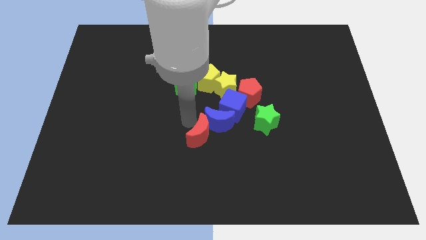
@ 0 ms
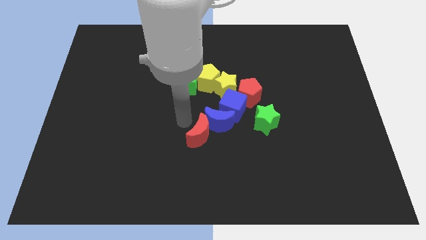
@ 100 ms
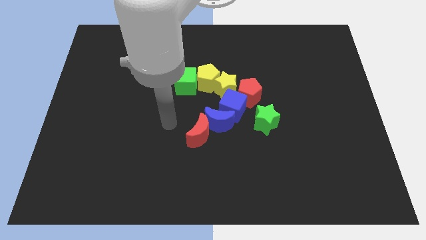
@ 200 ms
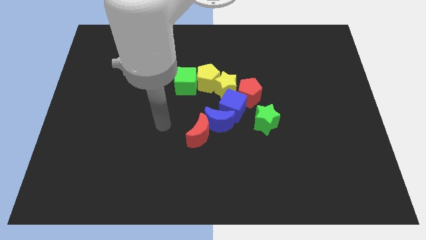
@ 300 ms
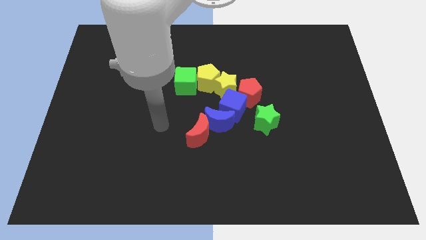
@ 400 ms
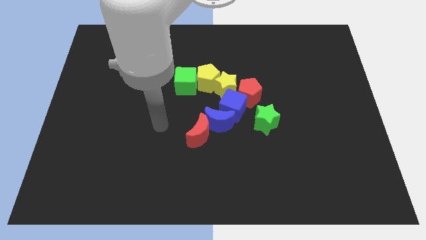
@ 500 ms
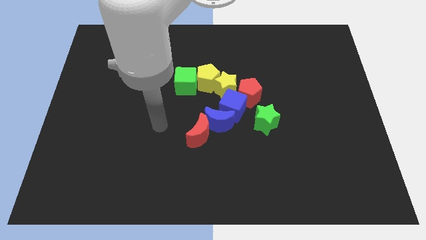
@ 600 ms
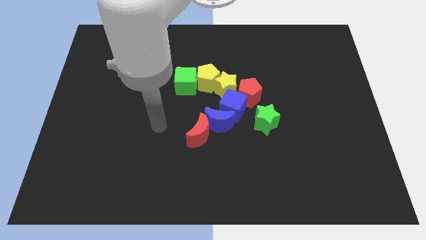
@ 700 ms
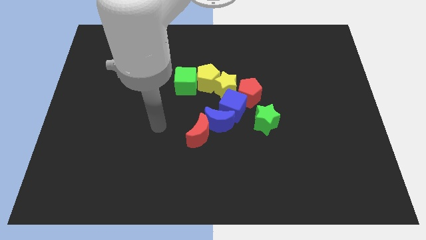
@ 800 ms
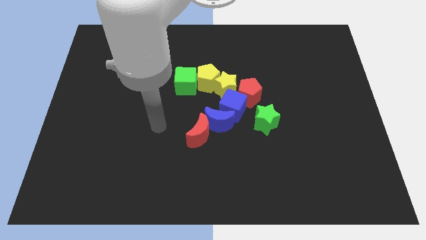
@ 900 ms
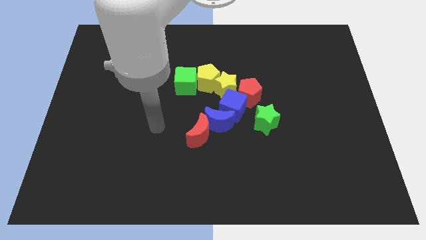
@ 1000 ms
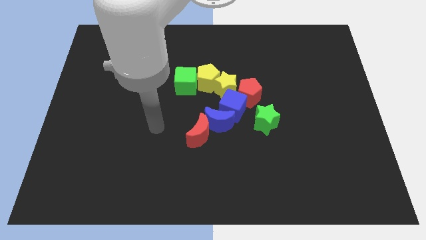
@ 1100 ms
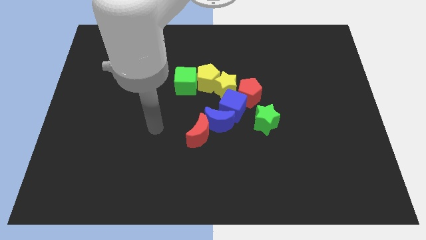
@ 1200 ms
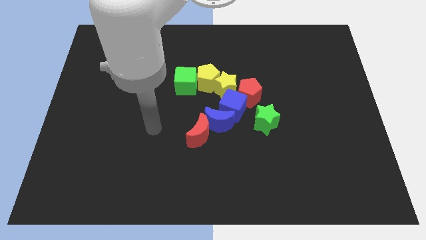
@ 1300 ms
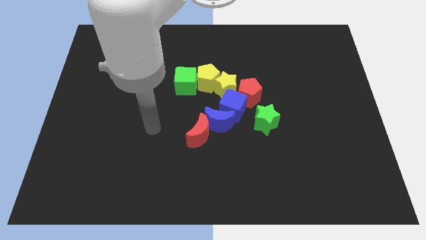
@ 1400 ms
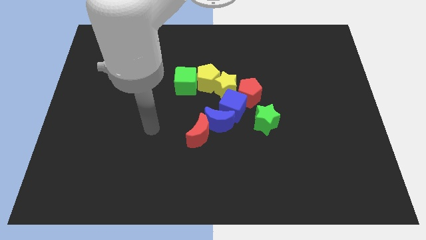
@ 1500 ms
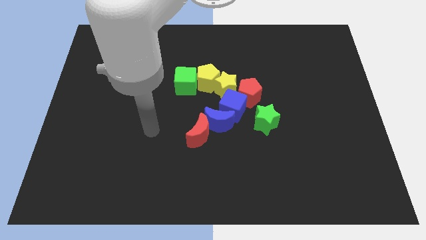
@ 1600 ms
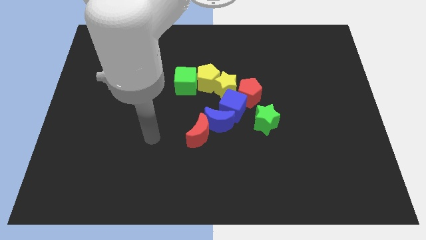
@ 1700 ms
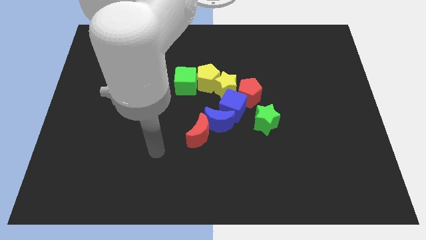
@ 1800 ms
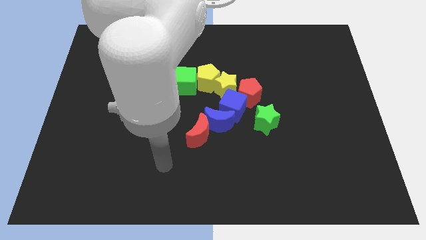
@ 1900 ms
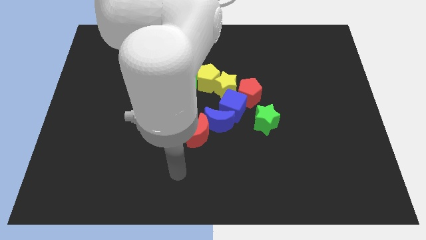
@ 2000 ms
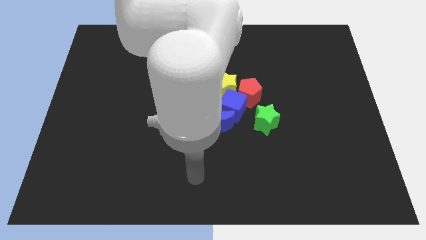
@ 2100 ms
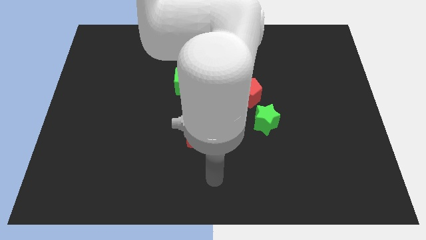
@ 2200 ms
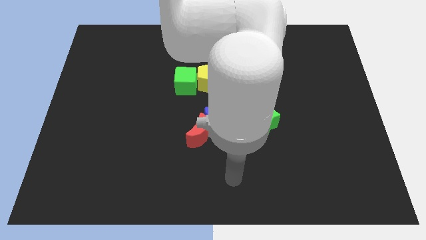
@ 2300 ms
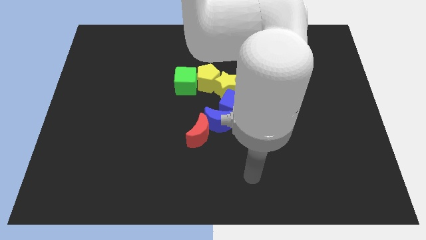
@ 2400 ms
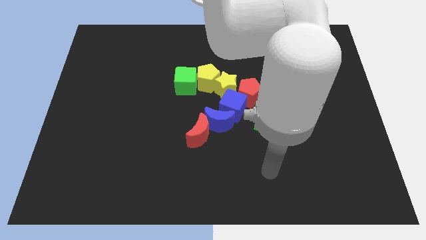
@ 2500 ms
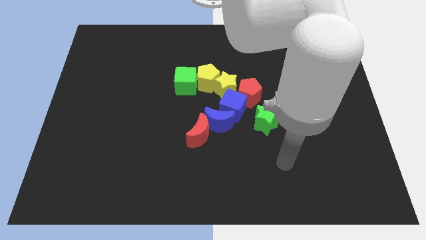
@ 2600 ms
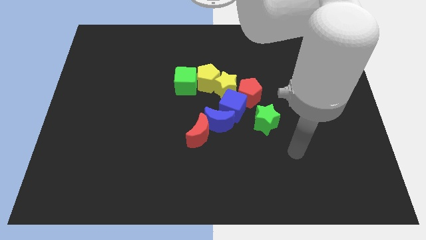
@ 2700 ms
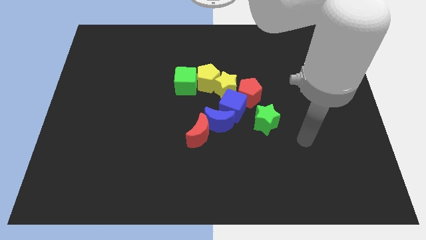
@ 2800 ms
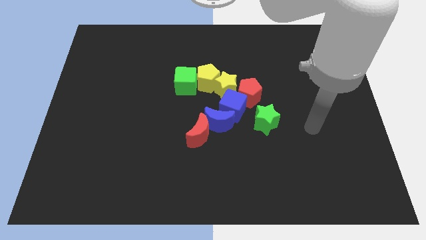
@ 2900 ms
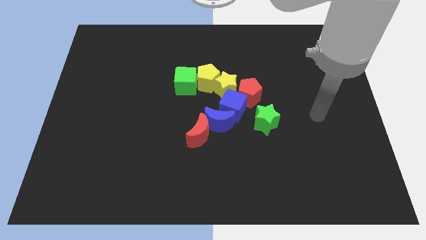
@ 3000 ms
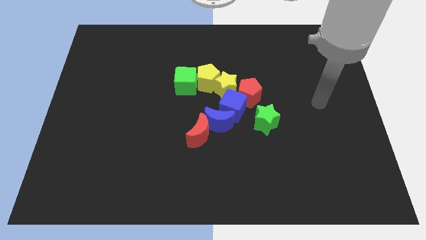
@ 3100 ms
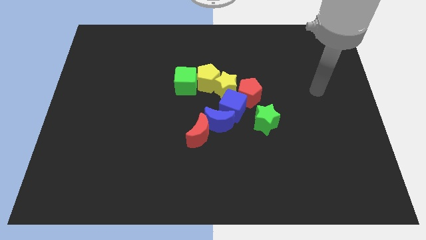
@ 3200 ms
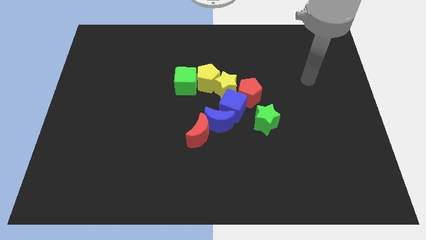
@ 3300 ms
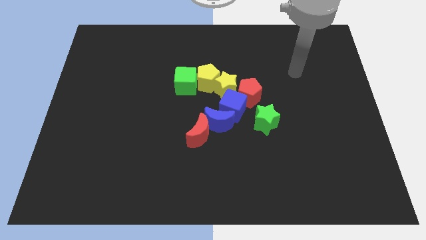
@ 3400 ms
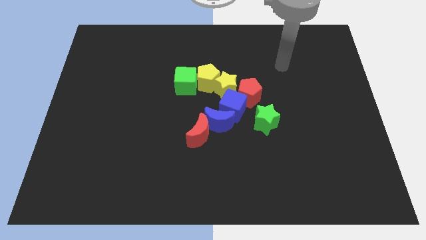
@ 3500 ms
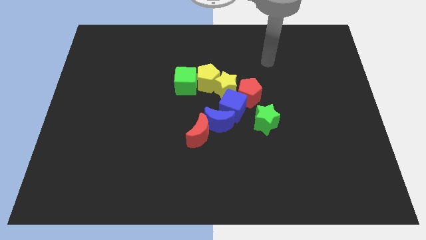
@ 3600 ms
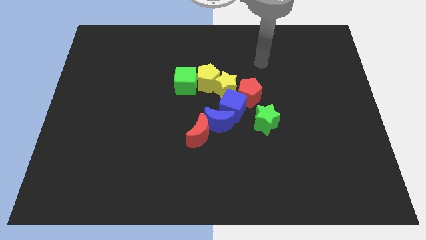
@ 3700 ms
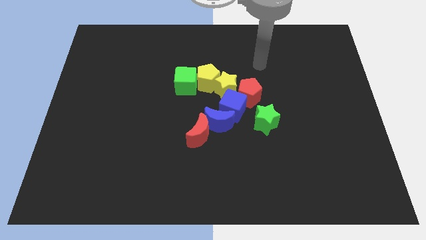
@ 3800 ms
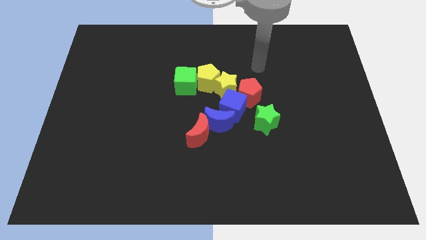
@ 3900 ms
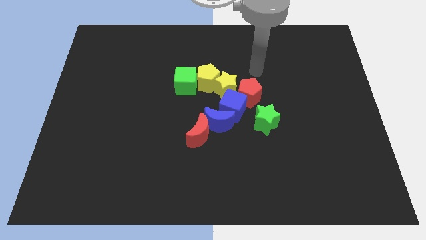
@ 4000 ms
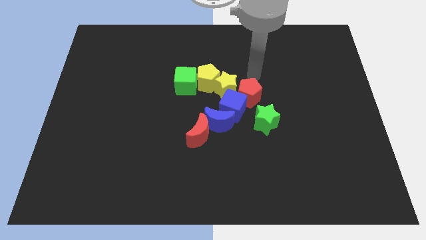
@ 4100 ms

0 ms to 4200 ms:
move the arm towards red pentagon

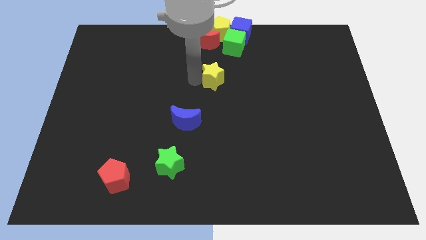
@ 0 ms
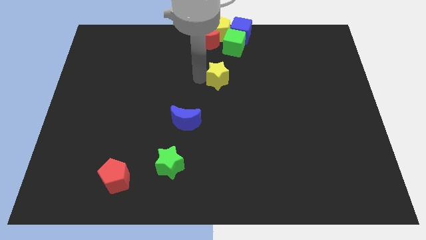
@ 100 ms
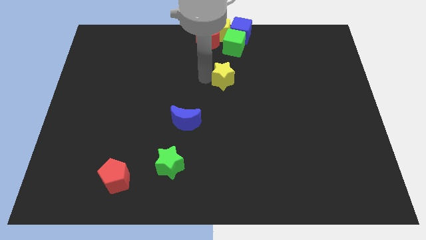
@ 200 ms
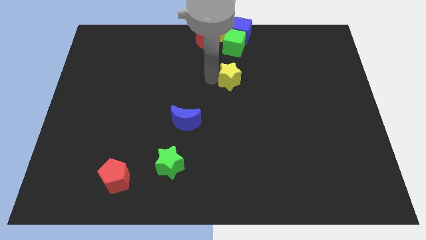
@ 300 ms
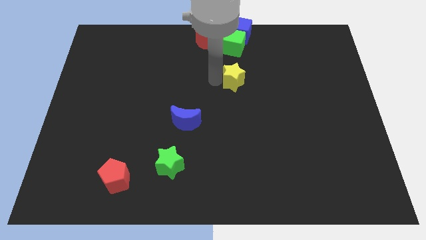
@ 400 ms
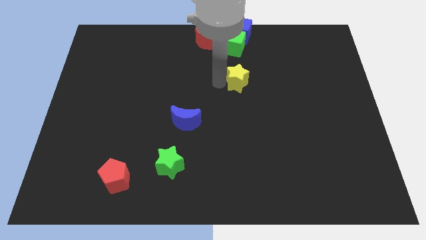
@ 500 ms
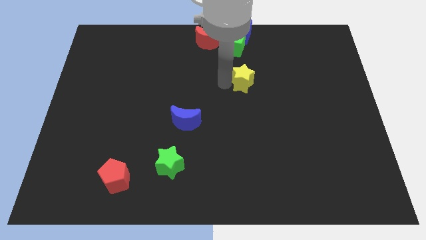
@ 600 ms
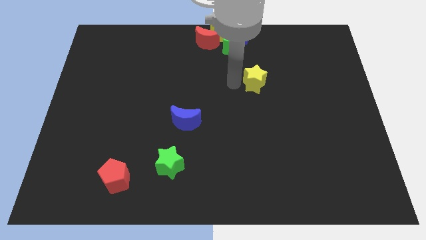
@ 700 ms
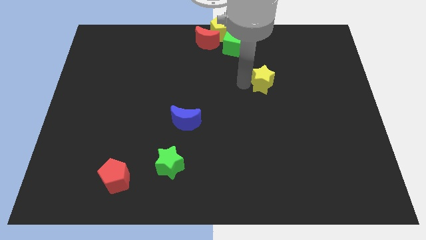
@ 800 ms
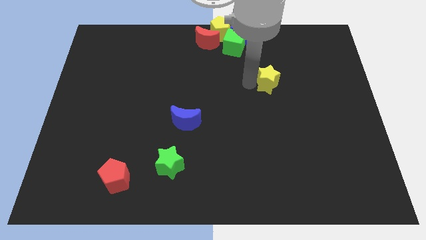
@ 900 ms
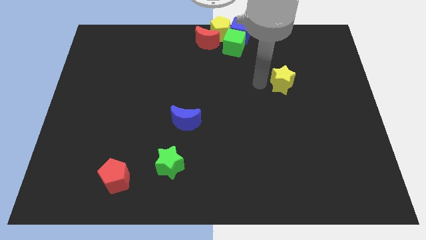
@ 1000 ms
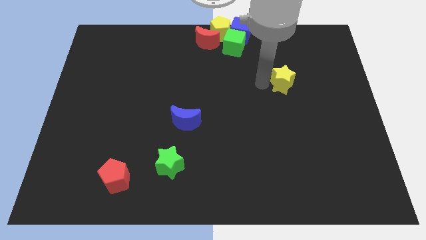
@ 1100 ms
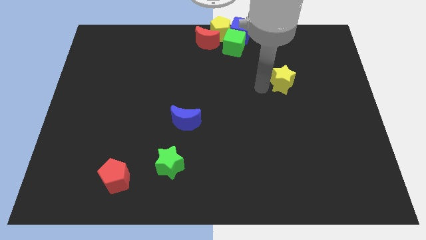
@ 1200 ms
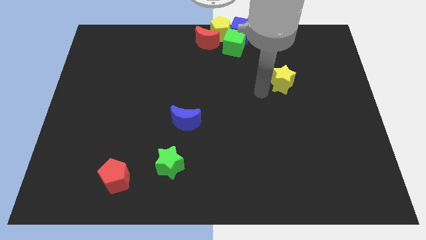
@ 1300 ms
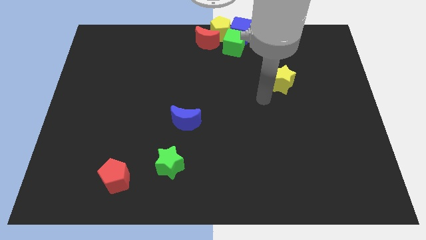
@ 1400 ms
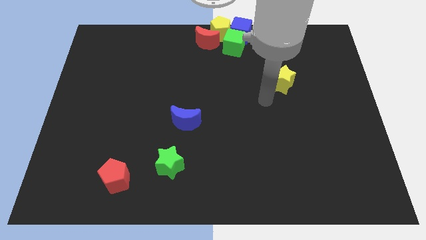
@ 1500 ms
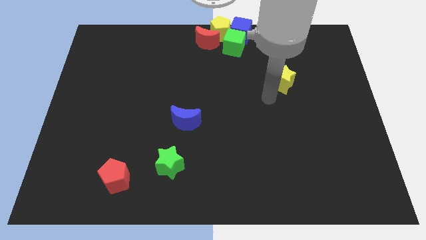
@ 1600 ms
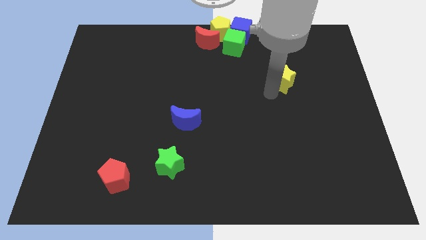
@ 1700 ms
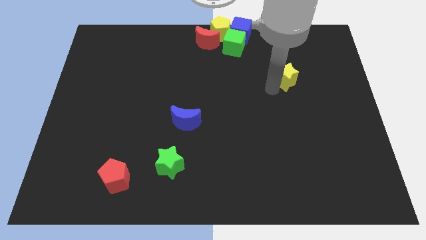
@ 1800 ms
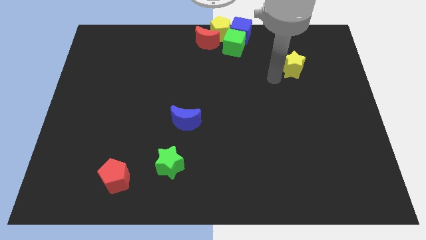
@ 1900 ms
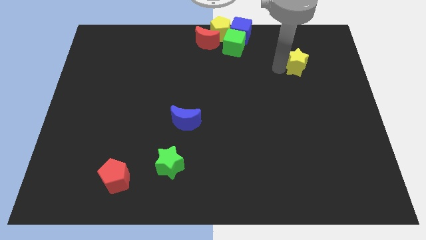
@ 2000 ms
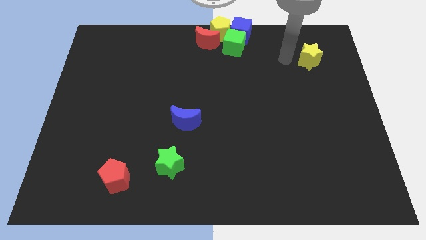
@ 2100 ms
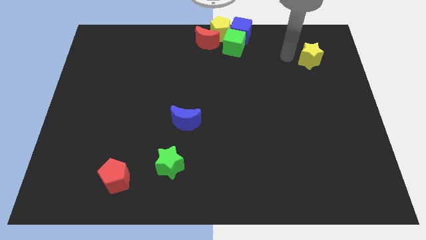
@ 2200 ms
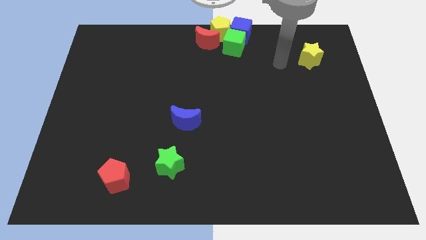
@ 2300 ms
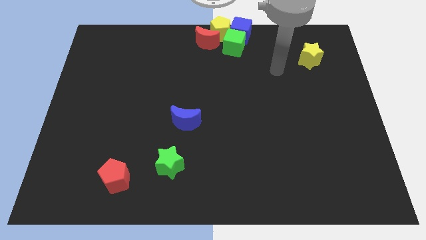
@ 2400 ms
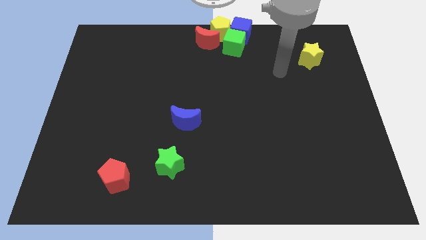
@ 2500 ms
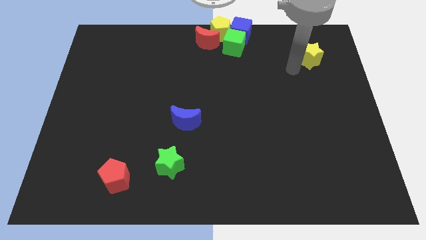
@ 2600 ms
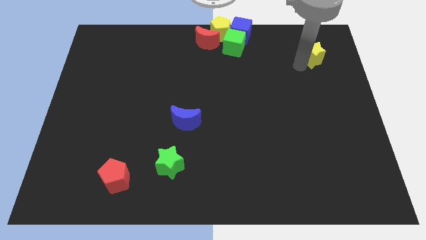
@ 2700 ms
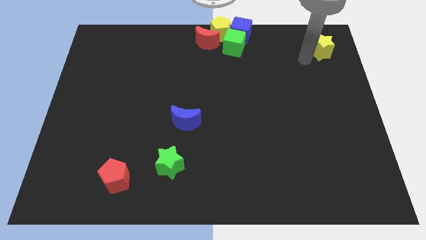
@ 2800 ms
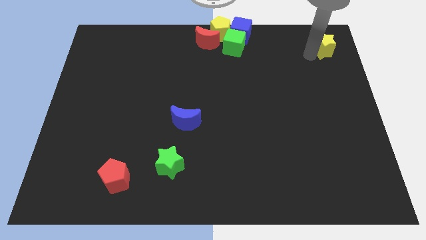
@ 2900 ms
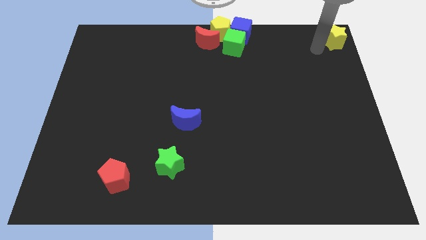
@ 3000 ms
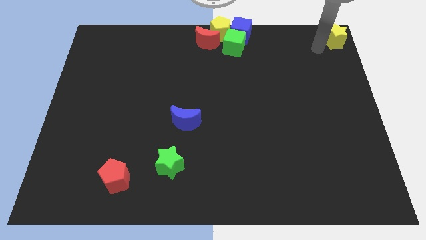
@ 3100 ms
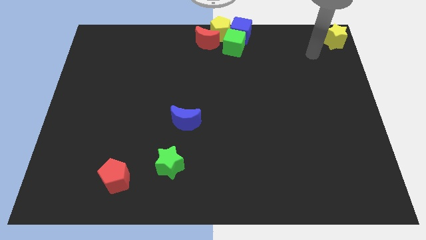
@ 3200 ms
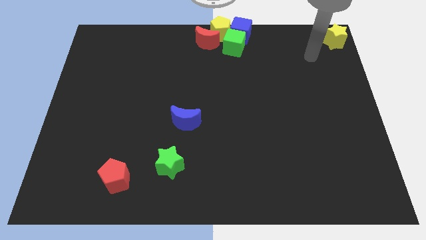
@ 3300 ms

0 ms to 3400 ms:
put the yellow star parallel right to the blue moon

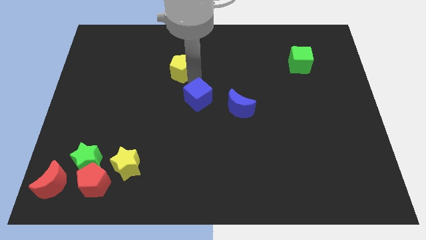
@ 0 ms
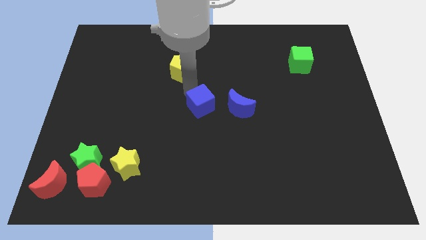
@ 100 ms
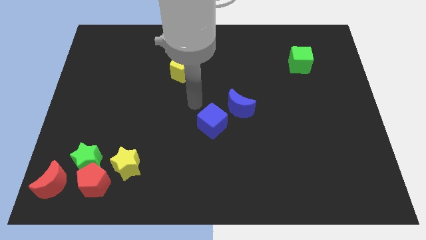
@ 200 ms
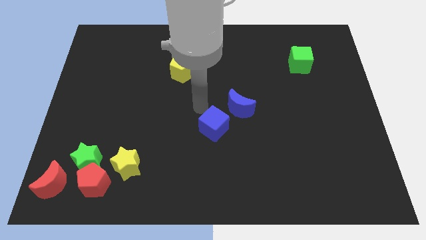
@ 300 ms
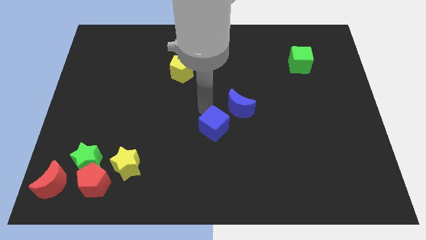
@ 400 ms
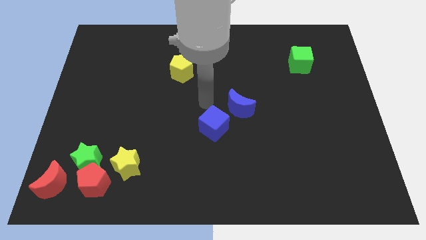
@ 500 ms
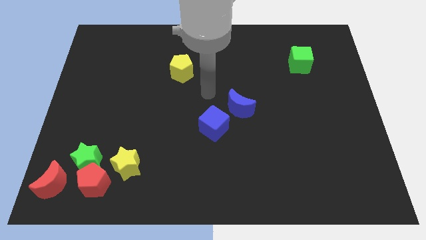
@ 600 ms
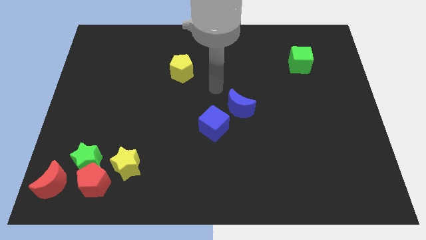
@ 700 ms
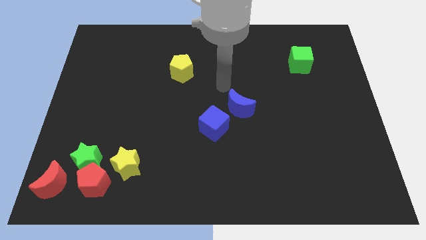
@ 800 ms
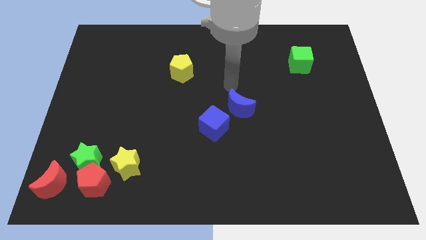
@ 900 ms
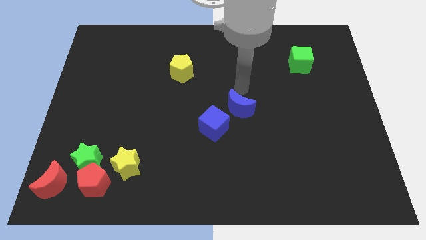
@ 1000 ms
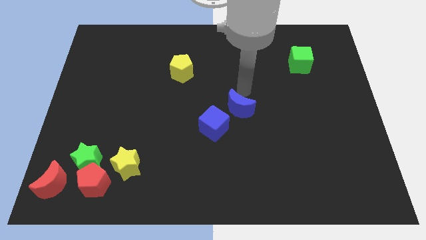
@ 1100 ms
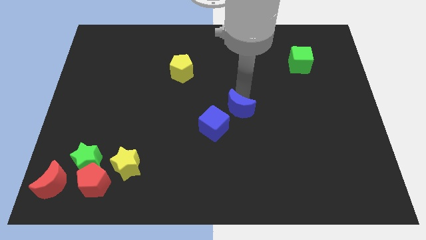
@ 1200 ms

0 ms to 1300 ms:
move blue cube to the left bottom of blue crescent
